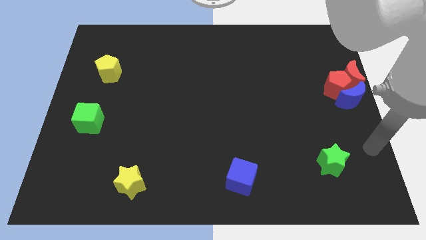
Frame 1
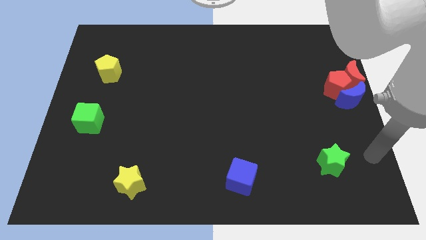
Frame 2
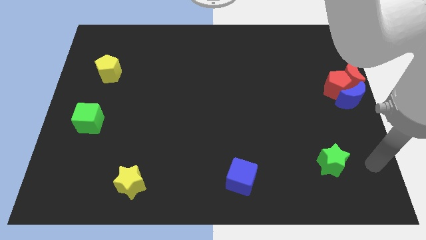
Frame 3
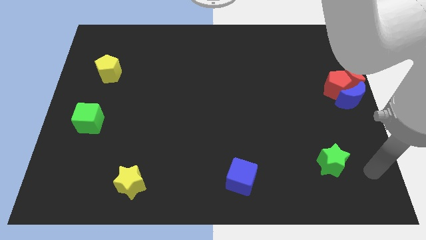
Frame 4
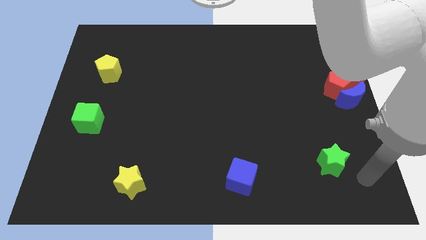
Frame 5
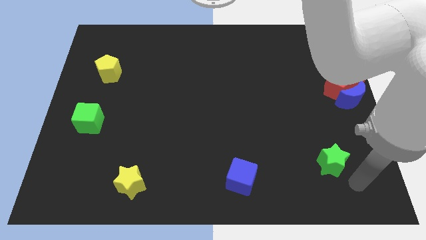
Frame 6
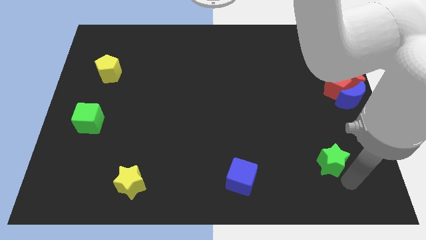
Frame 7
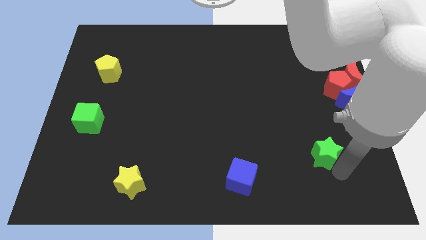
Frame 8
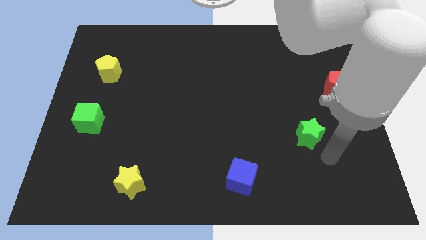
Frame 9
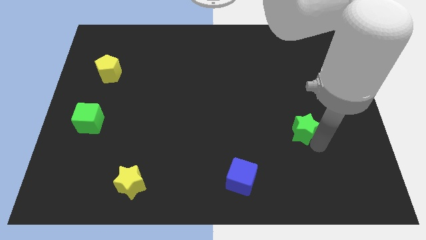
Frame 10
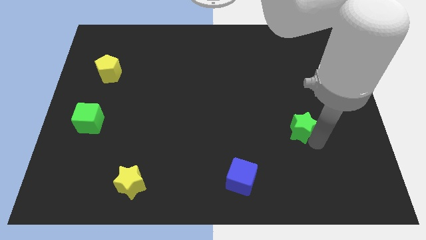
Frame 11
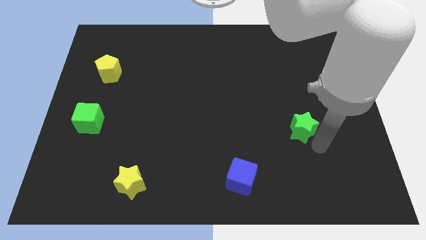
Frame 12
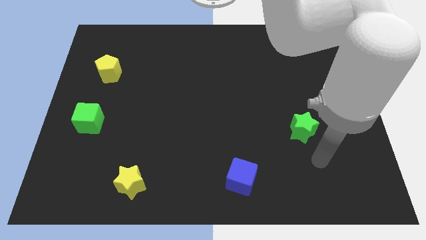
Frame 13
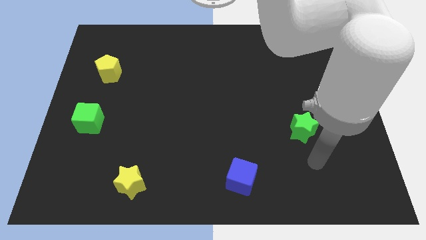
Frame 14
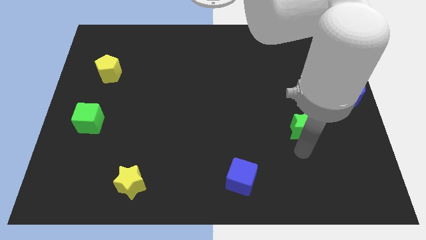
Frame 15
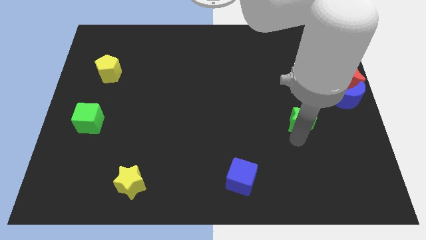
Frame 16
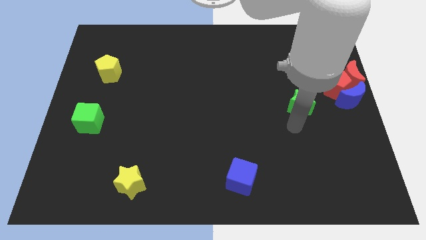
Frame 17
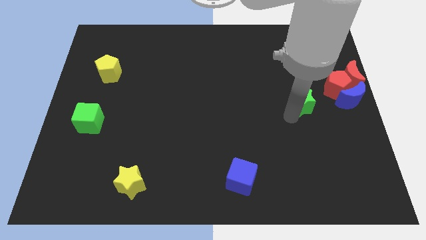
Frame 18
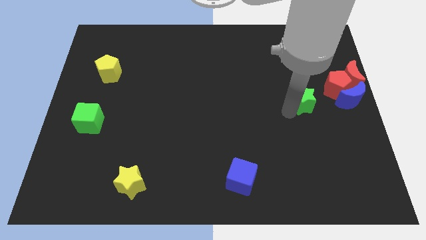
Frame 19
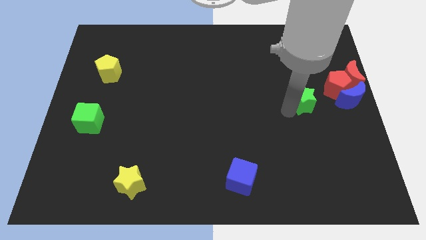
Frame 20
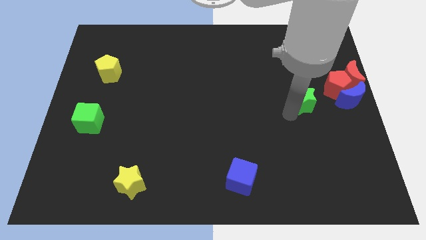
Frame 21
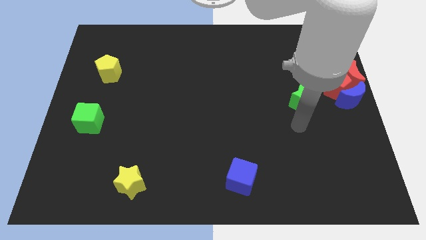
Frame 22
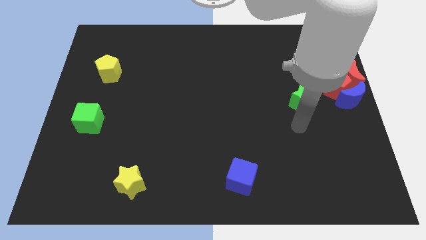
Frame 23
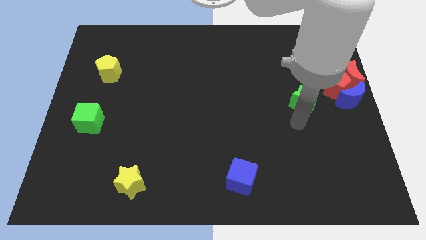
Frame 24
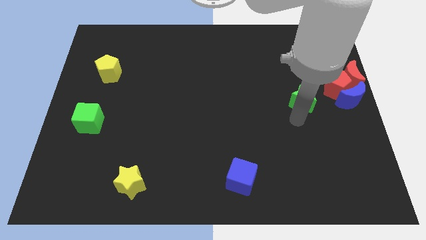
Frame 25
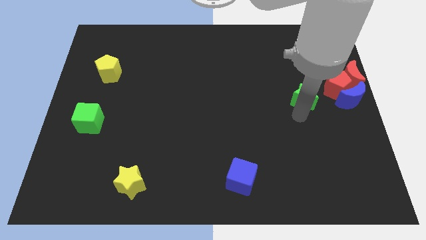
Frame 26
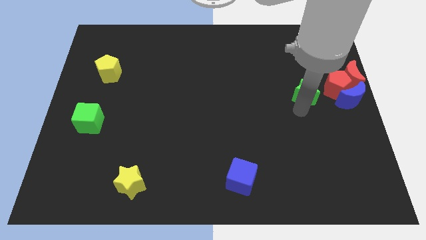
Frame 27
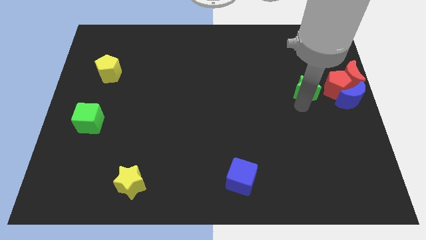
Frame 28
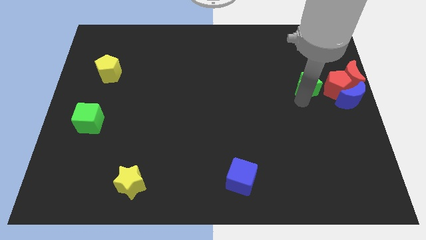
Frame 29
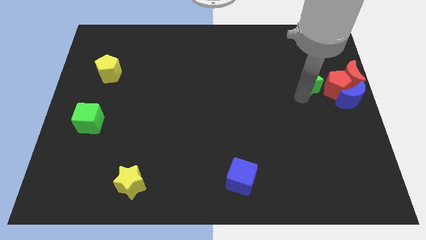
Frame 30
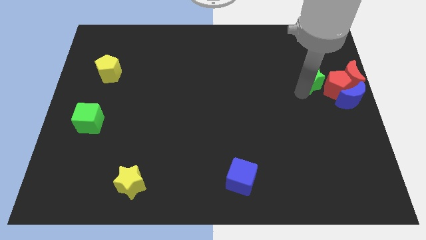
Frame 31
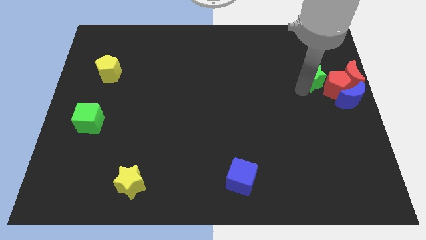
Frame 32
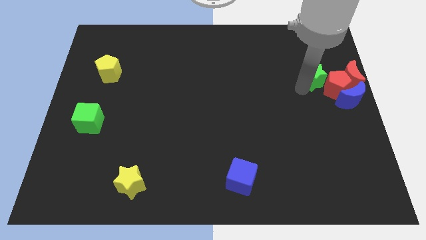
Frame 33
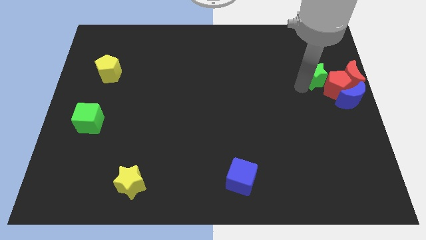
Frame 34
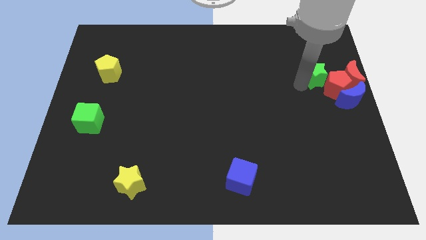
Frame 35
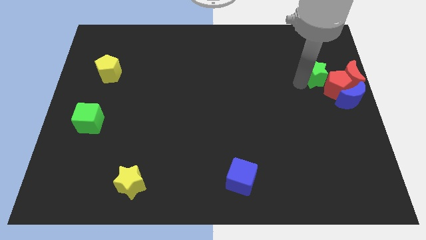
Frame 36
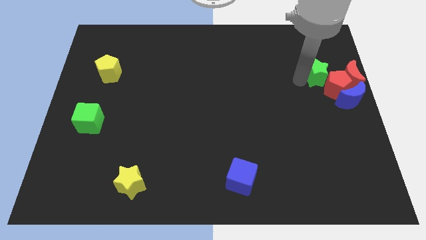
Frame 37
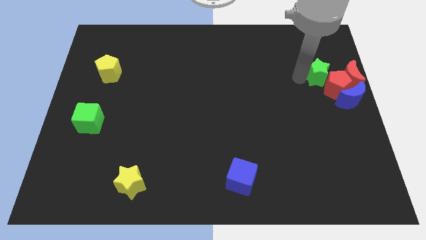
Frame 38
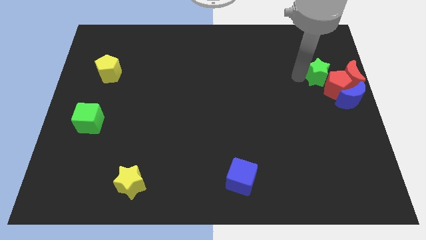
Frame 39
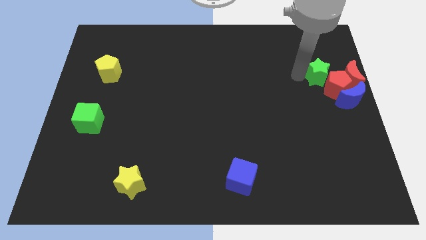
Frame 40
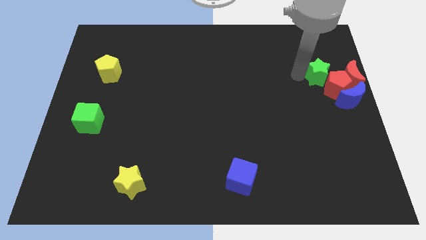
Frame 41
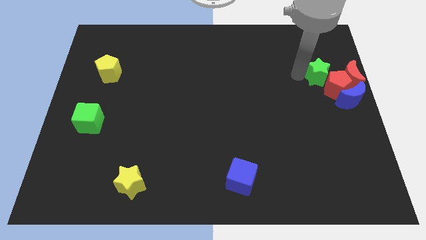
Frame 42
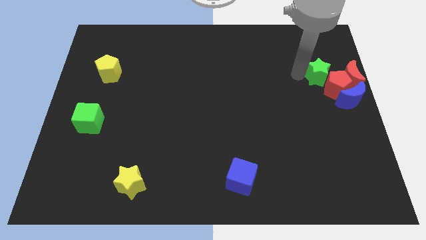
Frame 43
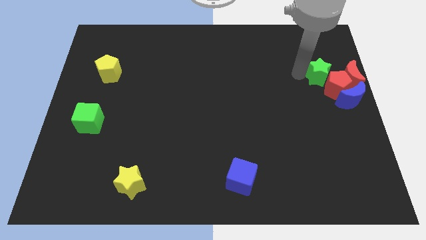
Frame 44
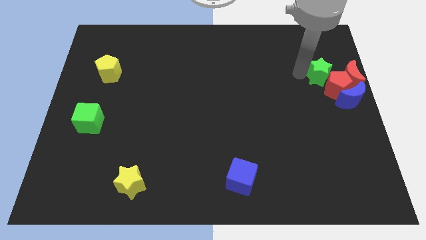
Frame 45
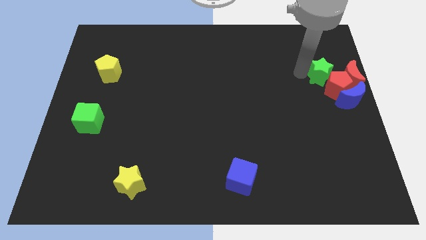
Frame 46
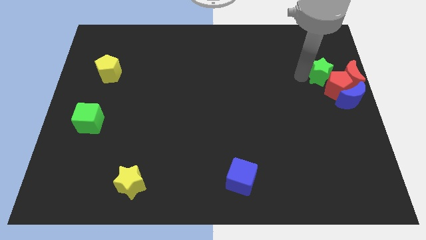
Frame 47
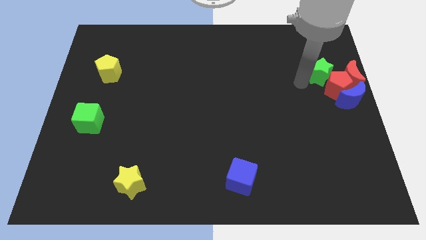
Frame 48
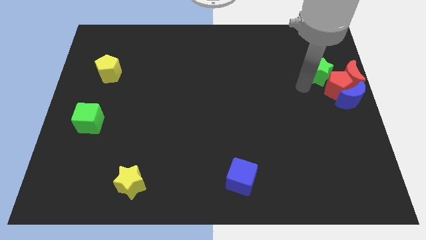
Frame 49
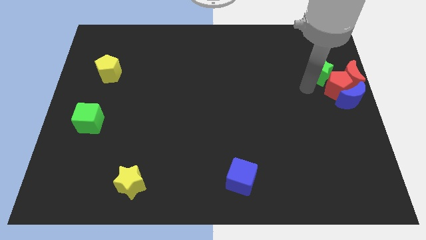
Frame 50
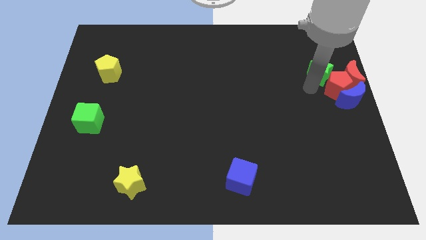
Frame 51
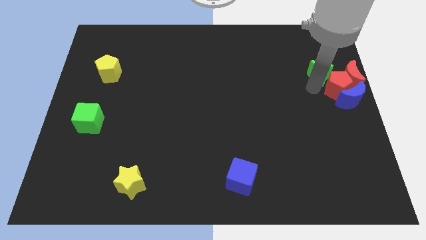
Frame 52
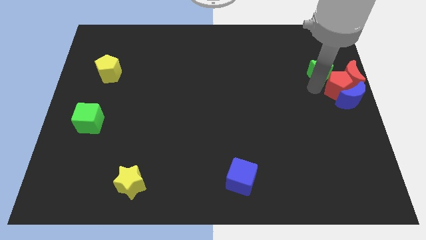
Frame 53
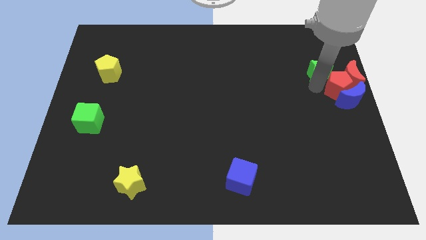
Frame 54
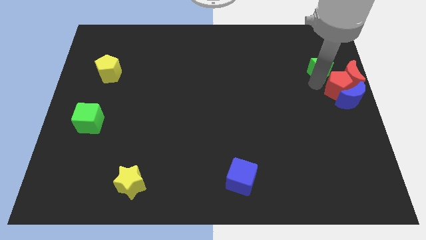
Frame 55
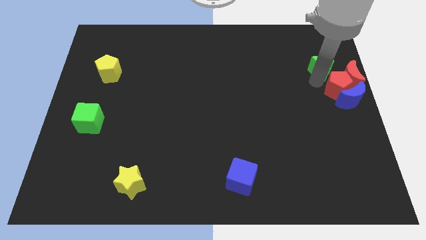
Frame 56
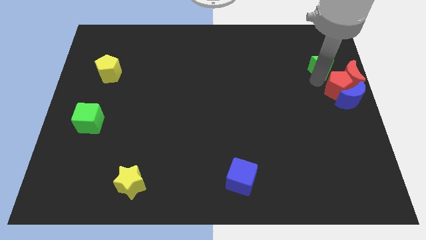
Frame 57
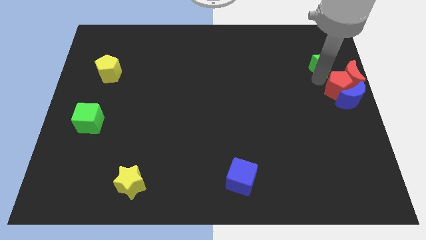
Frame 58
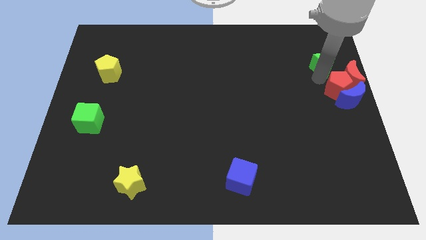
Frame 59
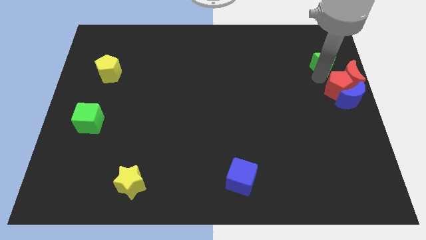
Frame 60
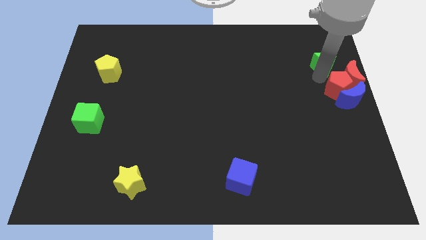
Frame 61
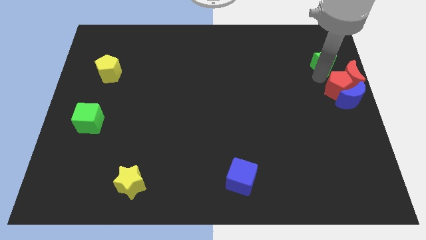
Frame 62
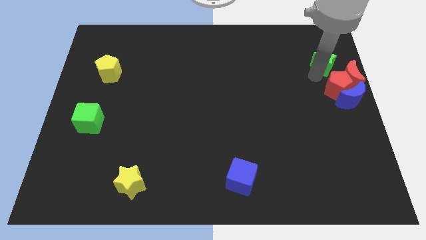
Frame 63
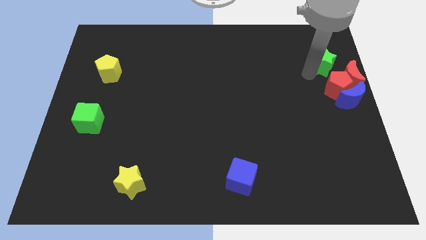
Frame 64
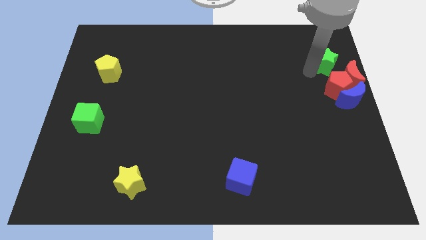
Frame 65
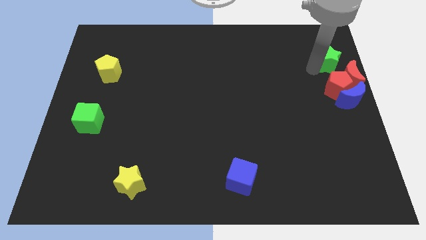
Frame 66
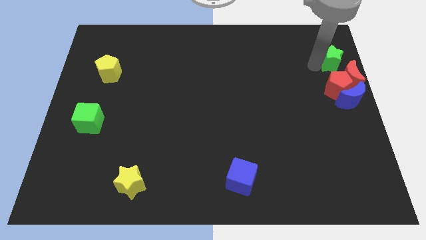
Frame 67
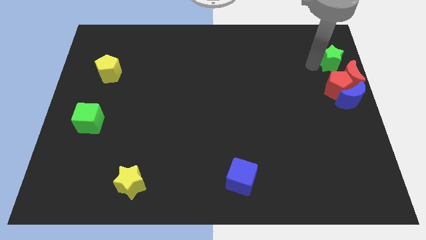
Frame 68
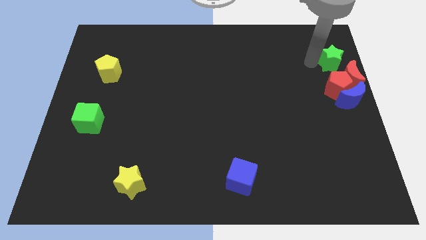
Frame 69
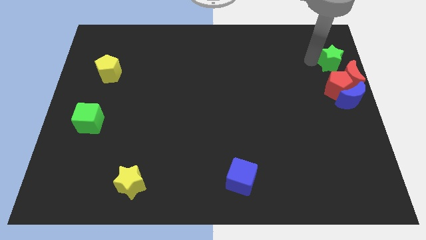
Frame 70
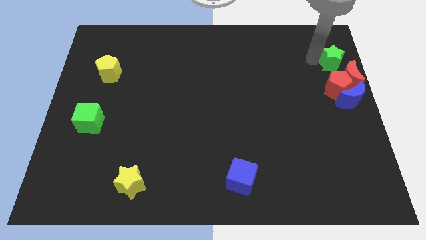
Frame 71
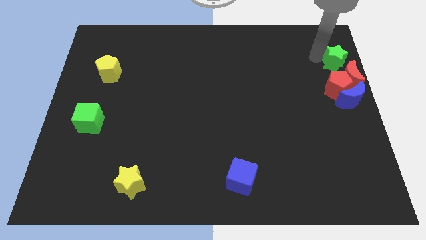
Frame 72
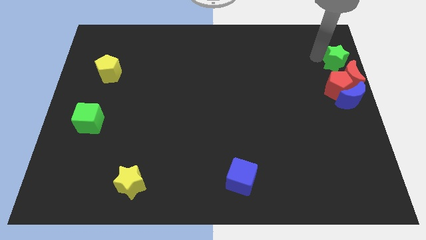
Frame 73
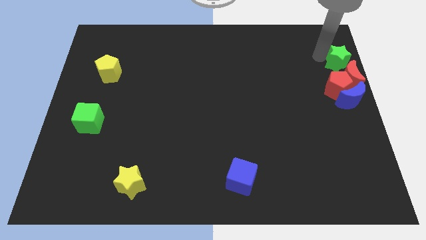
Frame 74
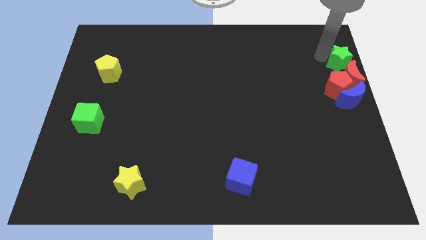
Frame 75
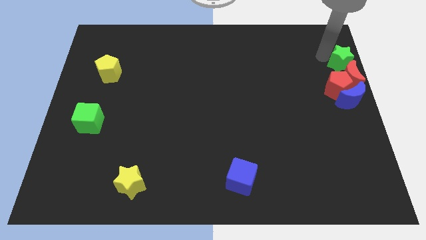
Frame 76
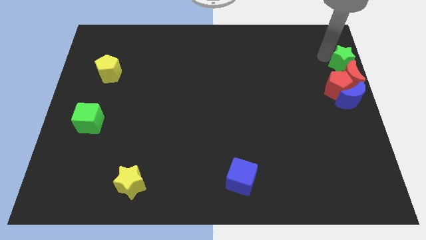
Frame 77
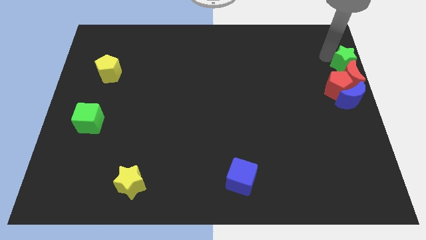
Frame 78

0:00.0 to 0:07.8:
place the green star above the red moon

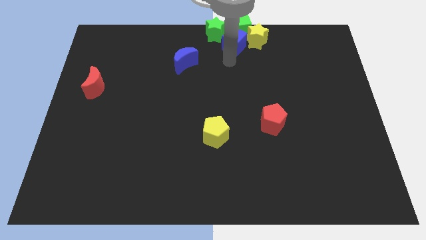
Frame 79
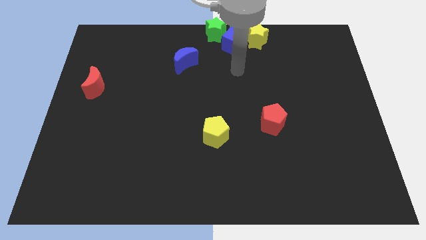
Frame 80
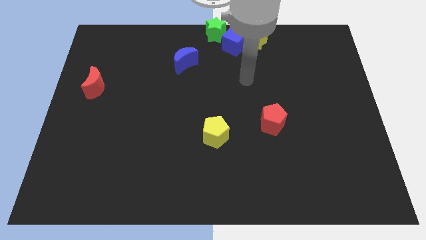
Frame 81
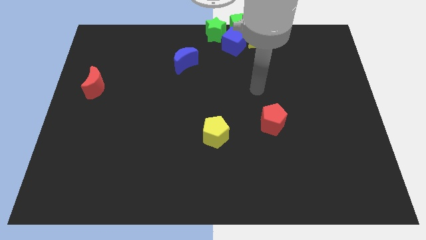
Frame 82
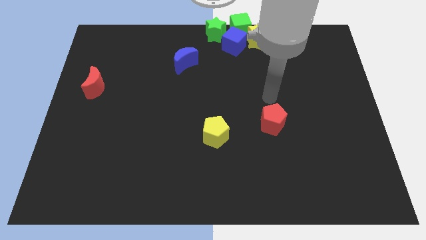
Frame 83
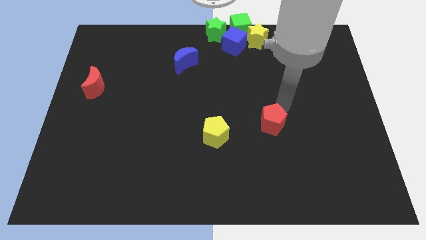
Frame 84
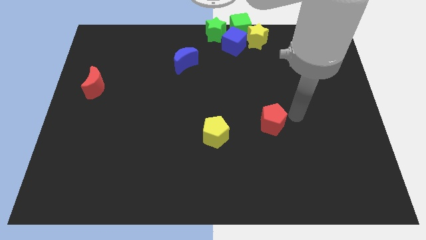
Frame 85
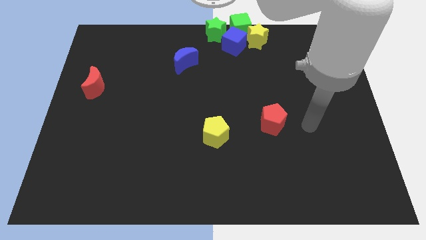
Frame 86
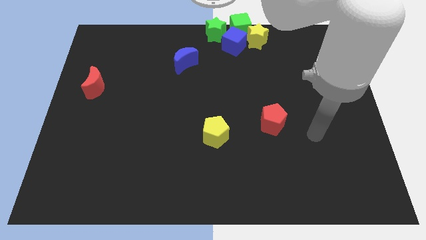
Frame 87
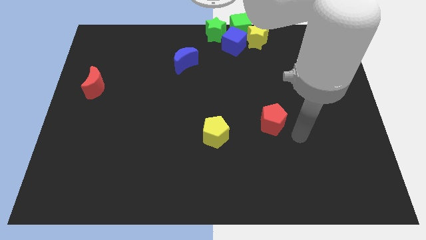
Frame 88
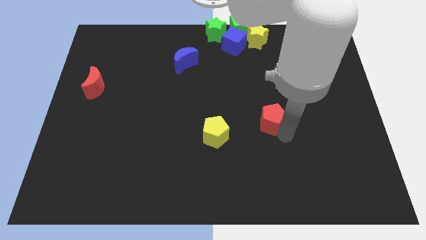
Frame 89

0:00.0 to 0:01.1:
place your arm below the red pentagon
